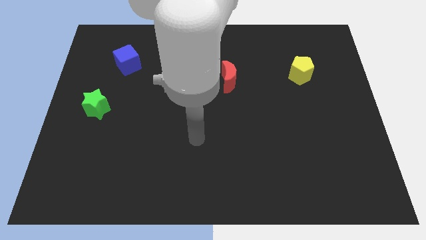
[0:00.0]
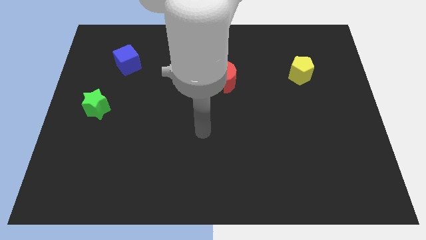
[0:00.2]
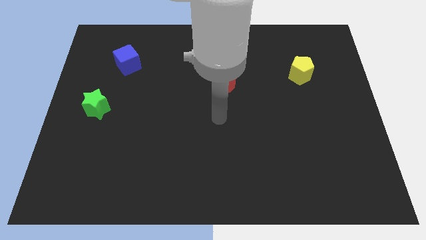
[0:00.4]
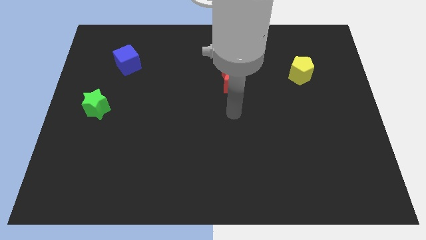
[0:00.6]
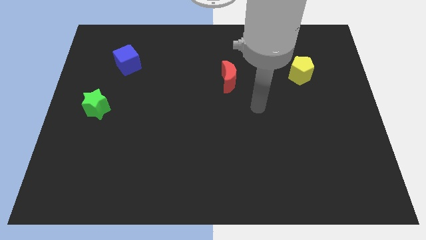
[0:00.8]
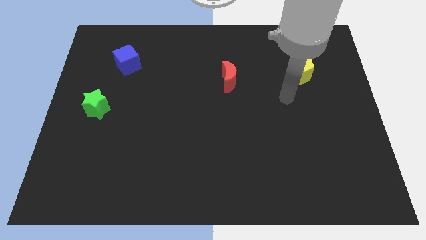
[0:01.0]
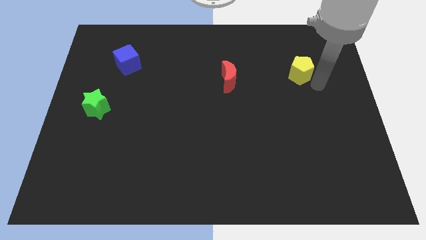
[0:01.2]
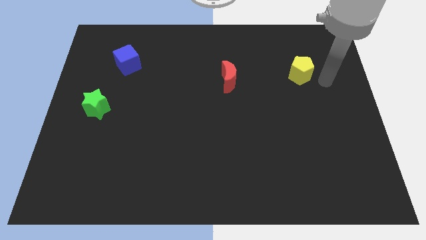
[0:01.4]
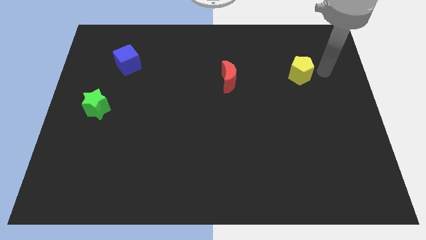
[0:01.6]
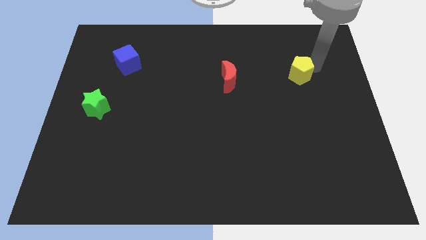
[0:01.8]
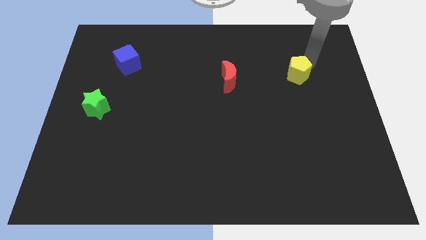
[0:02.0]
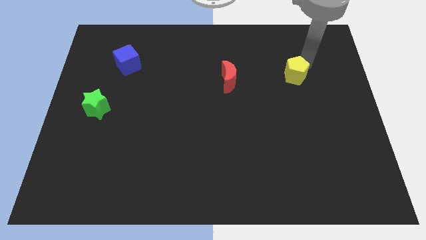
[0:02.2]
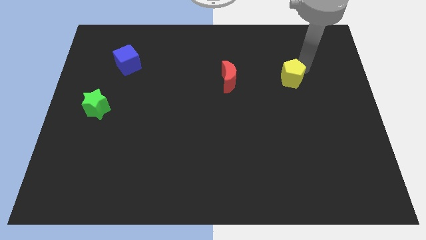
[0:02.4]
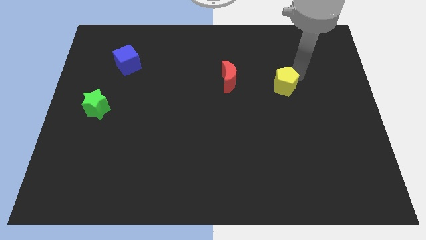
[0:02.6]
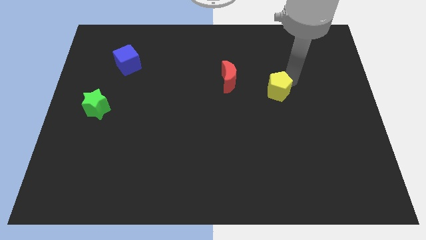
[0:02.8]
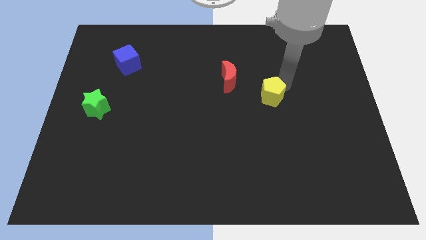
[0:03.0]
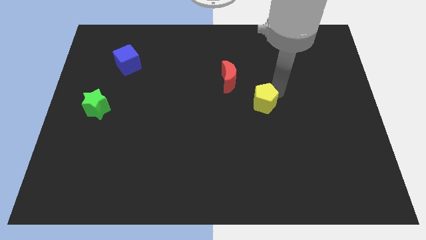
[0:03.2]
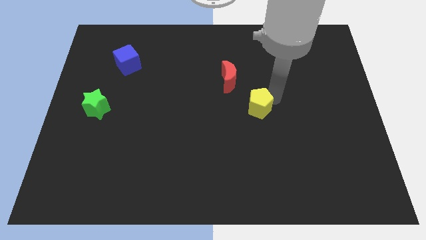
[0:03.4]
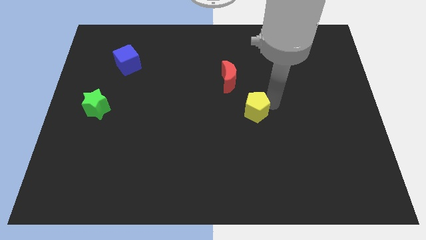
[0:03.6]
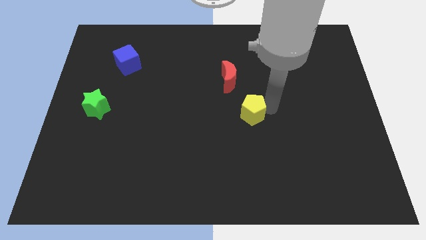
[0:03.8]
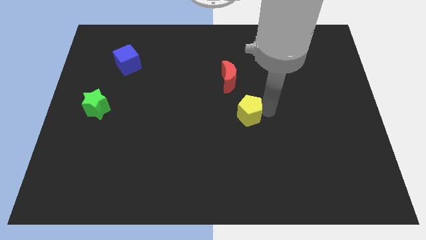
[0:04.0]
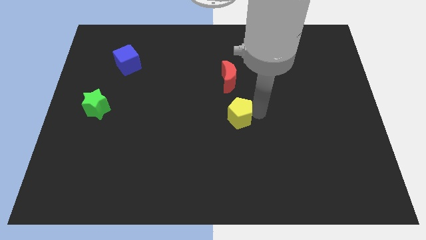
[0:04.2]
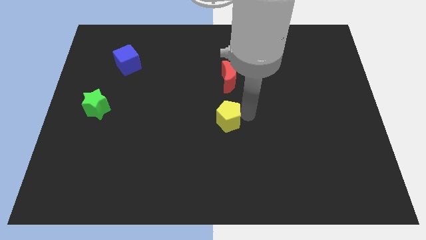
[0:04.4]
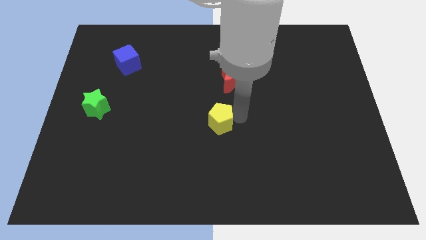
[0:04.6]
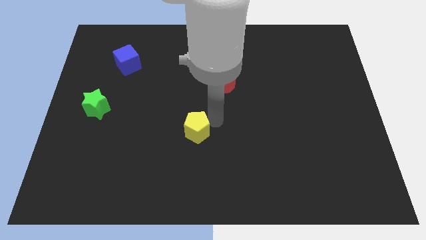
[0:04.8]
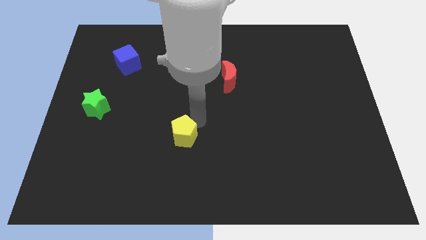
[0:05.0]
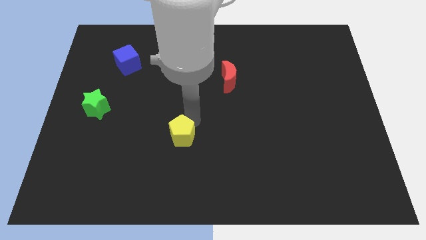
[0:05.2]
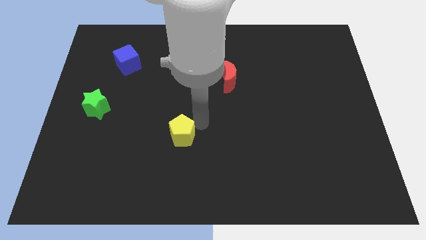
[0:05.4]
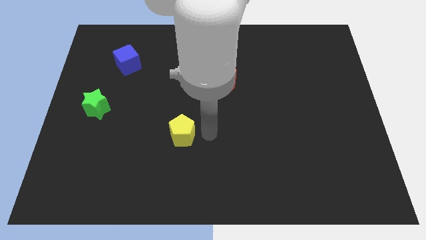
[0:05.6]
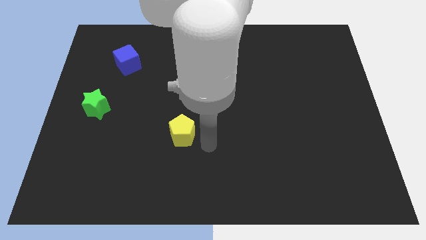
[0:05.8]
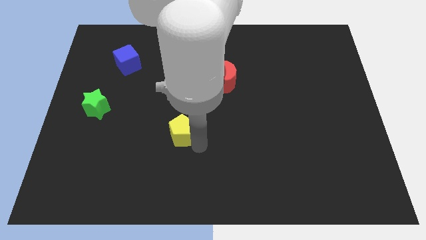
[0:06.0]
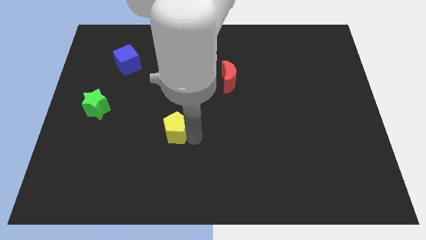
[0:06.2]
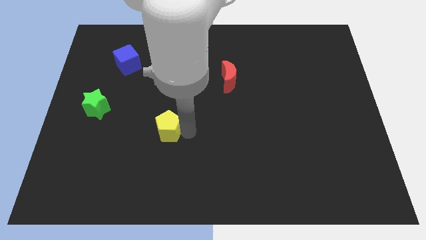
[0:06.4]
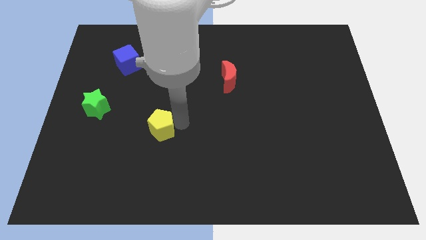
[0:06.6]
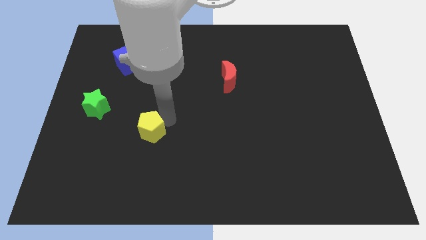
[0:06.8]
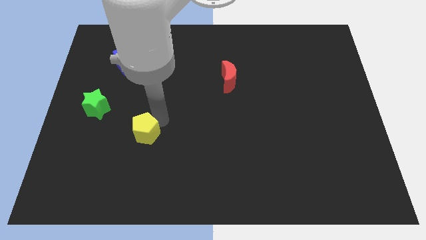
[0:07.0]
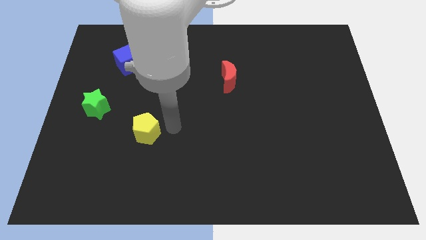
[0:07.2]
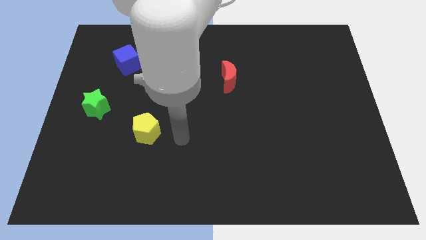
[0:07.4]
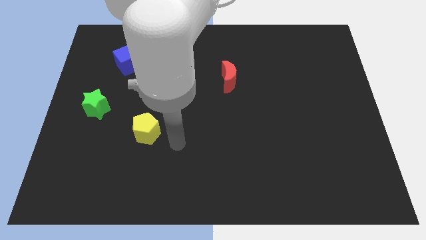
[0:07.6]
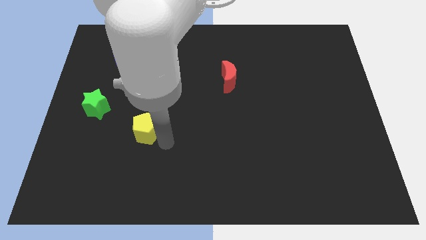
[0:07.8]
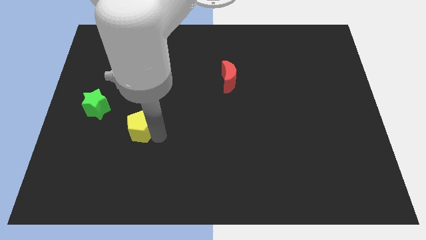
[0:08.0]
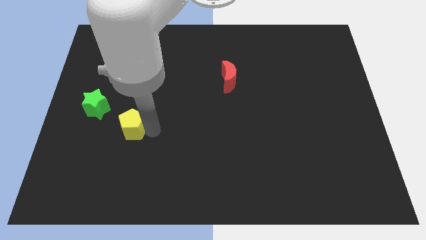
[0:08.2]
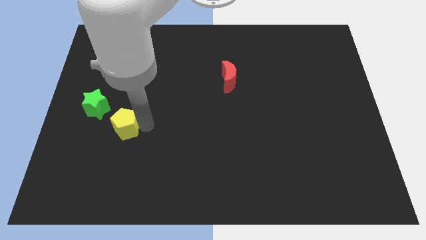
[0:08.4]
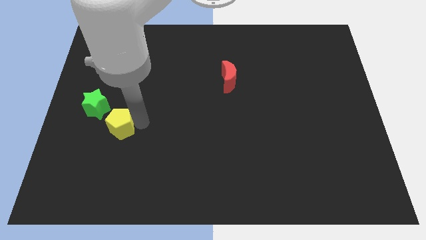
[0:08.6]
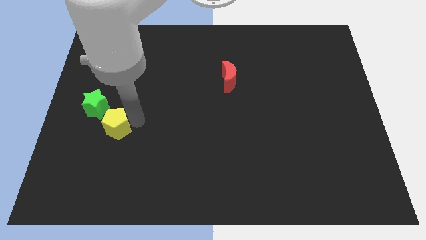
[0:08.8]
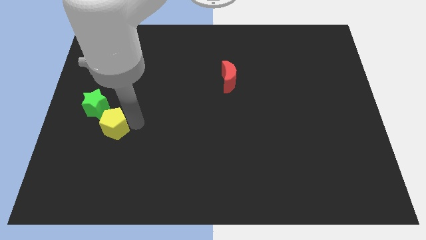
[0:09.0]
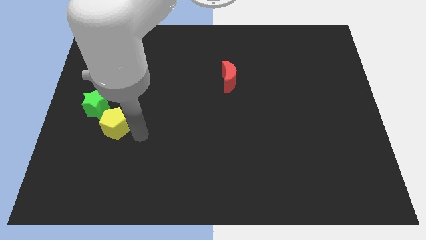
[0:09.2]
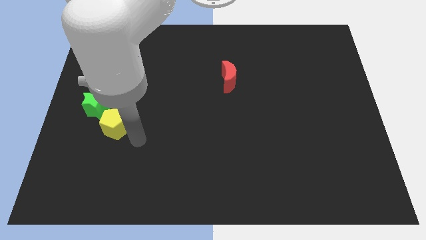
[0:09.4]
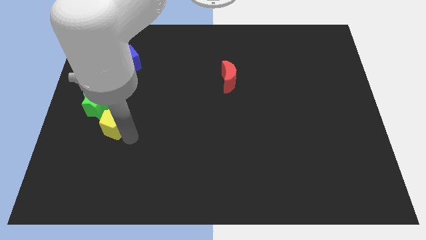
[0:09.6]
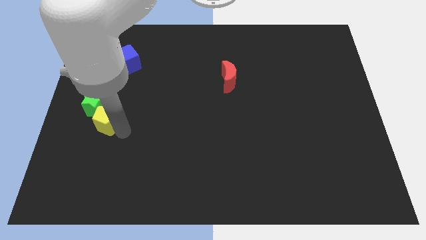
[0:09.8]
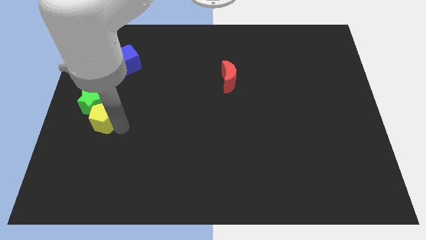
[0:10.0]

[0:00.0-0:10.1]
move the pentagon close to the green block

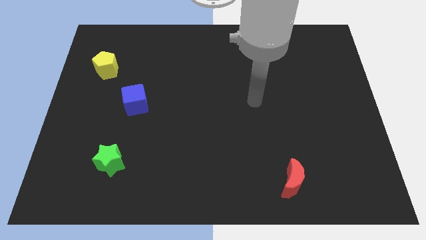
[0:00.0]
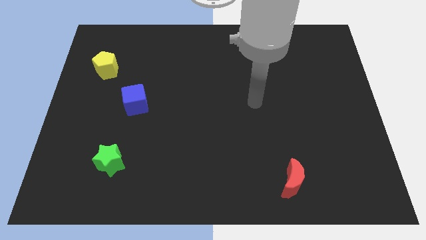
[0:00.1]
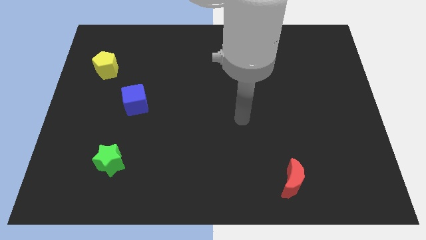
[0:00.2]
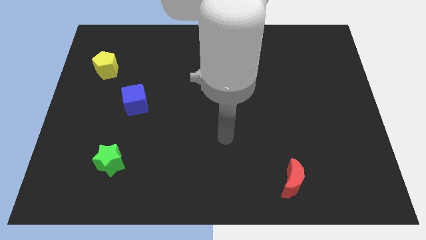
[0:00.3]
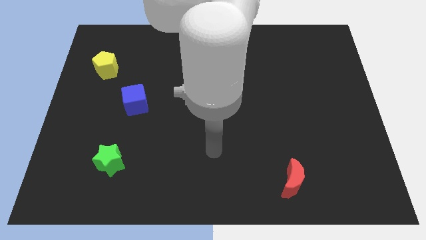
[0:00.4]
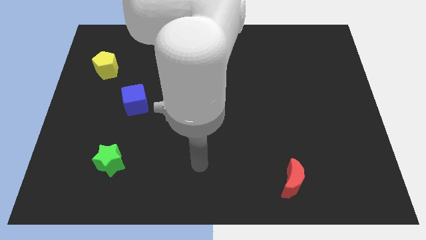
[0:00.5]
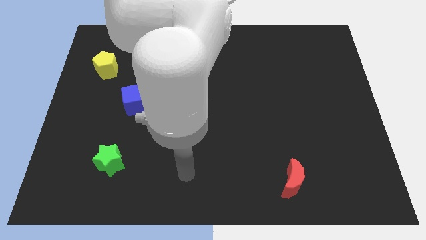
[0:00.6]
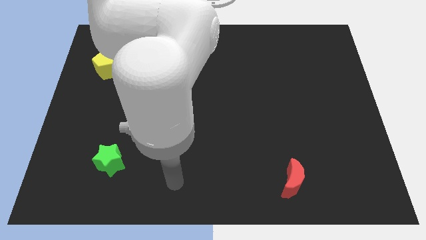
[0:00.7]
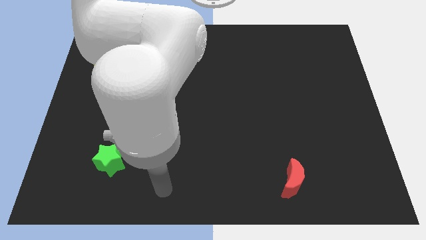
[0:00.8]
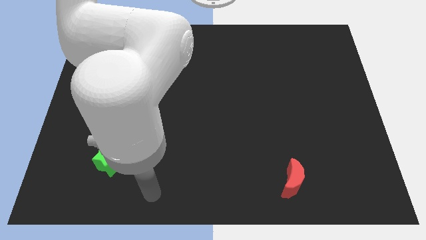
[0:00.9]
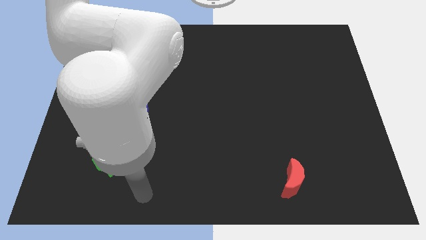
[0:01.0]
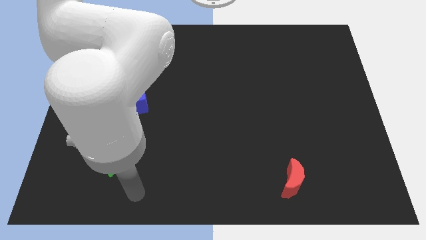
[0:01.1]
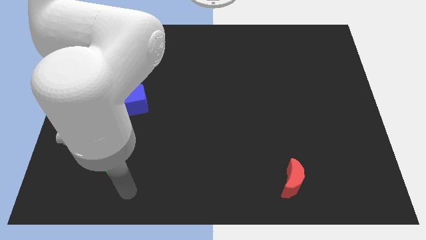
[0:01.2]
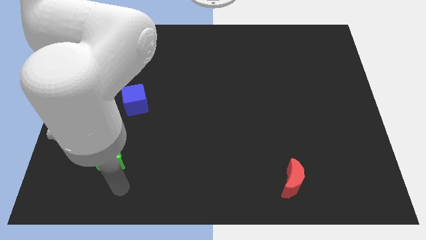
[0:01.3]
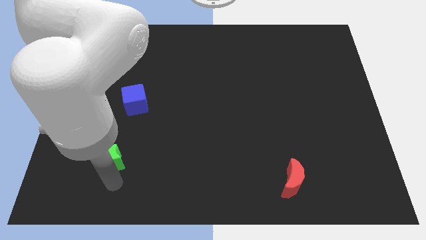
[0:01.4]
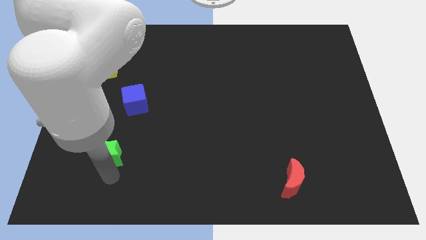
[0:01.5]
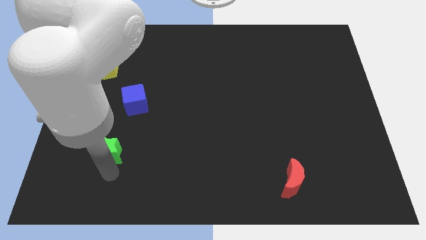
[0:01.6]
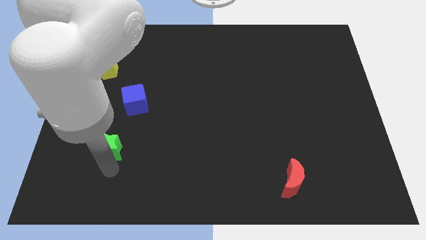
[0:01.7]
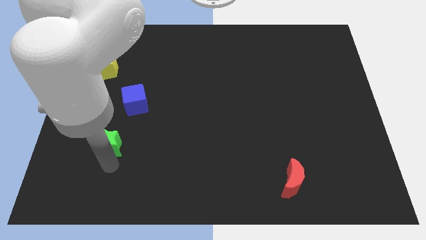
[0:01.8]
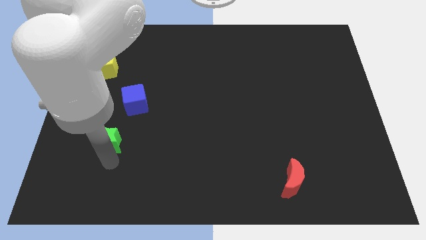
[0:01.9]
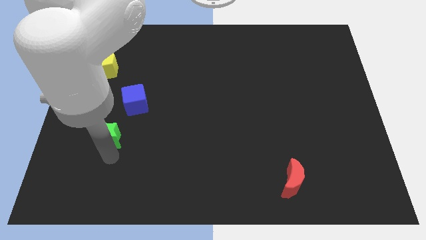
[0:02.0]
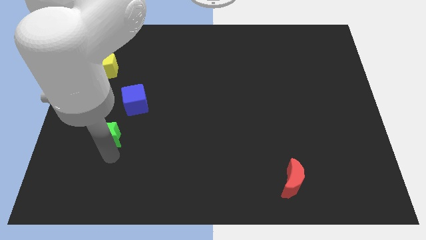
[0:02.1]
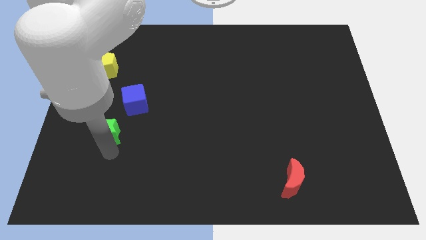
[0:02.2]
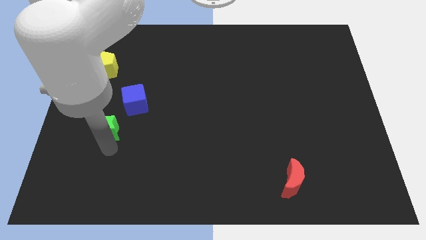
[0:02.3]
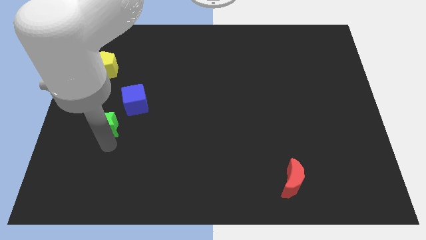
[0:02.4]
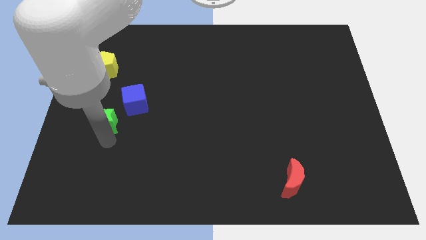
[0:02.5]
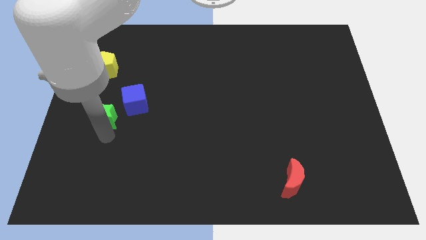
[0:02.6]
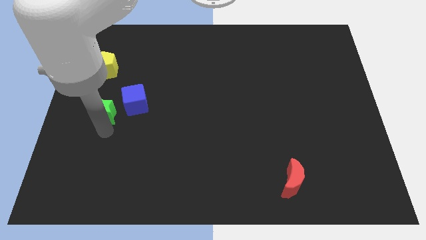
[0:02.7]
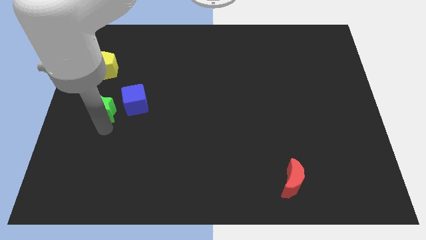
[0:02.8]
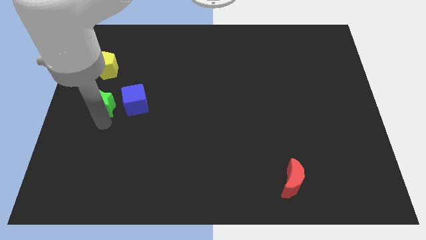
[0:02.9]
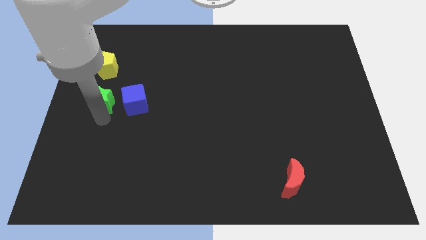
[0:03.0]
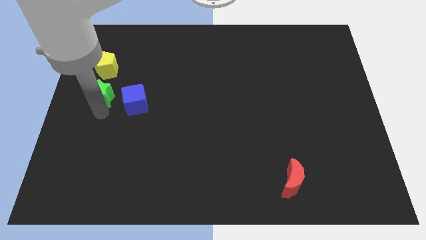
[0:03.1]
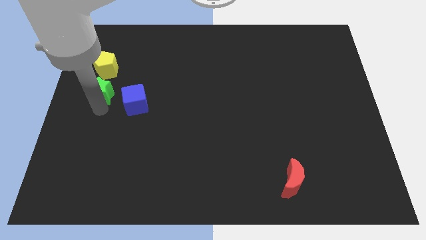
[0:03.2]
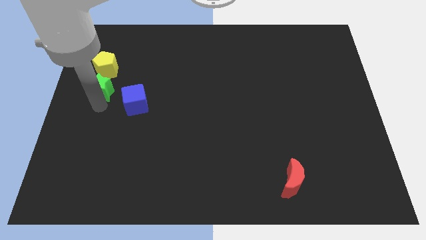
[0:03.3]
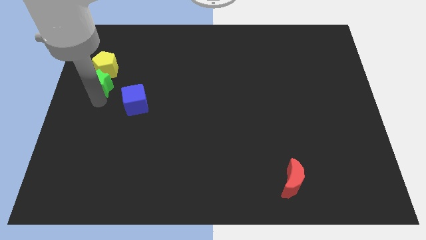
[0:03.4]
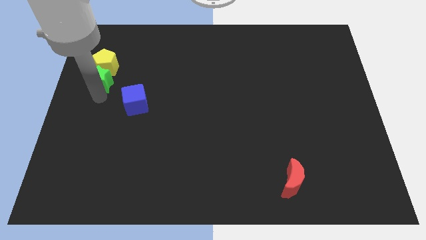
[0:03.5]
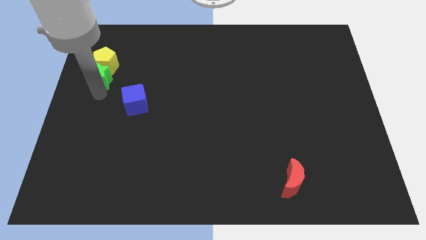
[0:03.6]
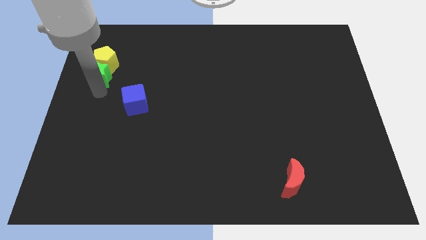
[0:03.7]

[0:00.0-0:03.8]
slide the green star next to the pentagon
